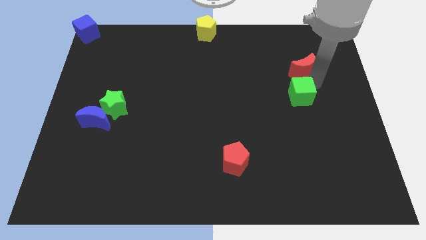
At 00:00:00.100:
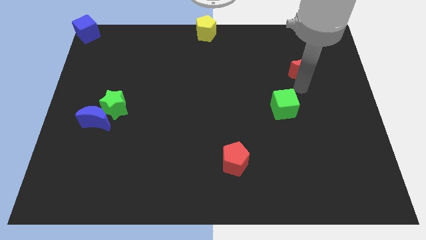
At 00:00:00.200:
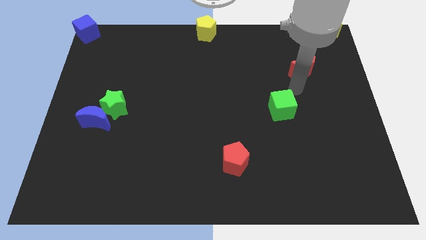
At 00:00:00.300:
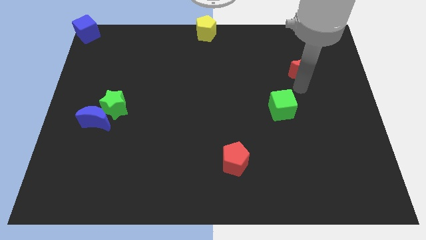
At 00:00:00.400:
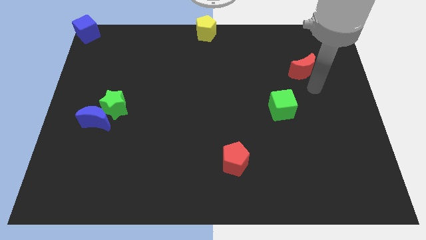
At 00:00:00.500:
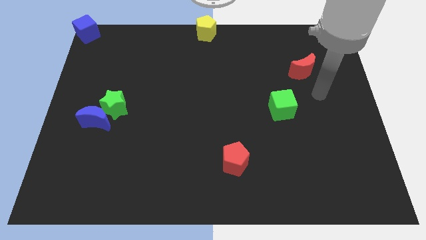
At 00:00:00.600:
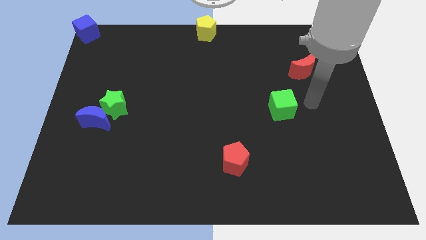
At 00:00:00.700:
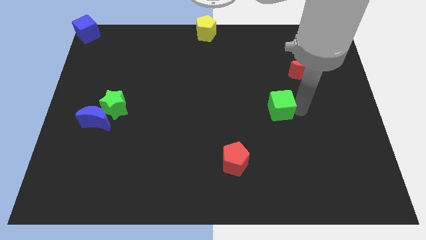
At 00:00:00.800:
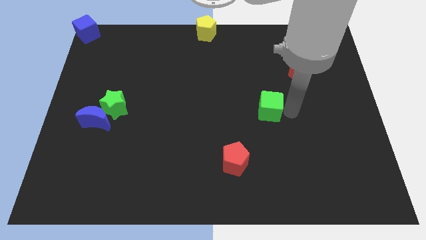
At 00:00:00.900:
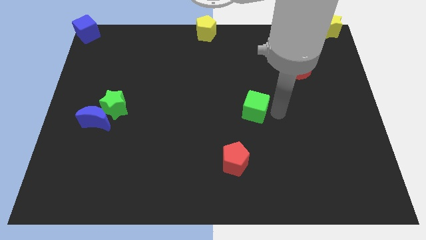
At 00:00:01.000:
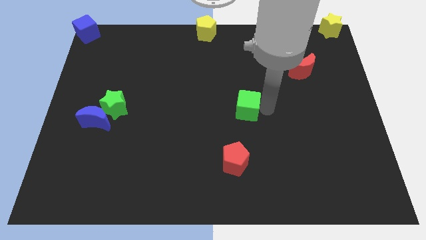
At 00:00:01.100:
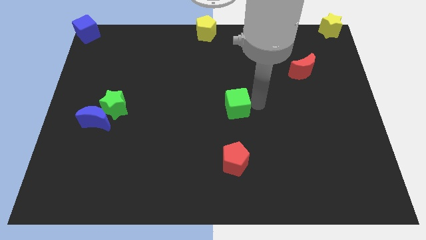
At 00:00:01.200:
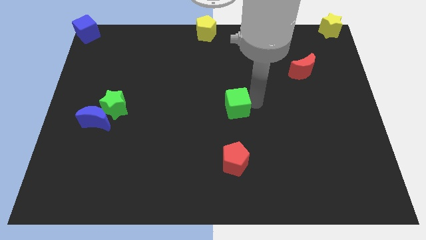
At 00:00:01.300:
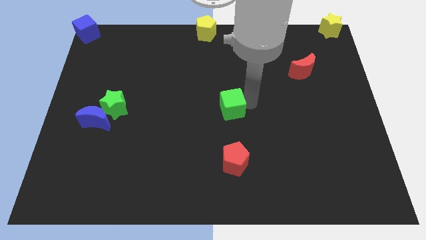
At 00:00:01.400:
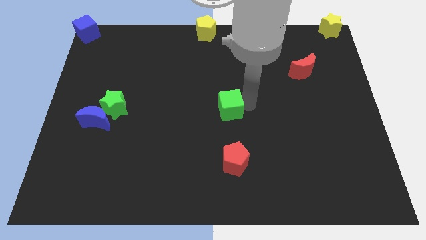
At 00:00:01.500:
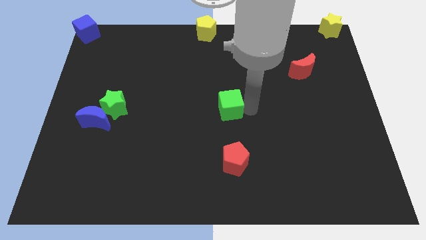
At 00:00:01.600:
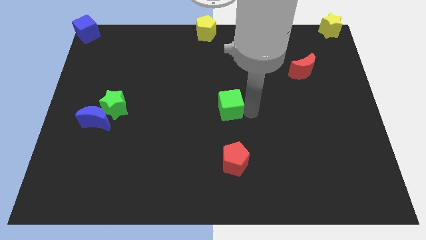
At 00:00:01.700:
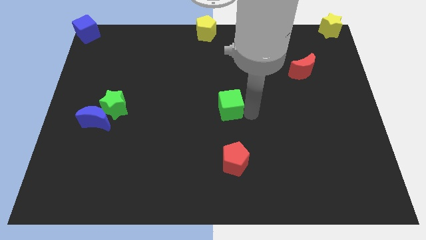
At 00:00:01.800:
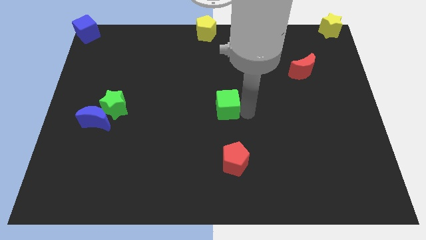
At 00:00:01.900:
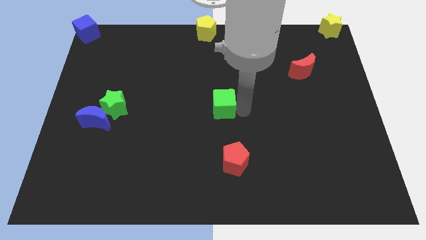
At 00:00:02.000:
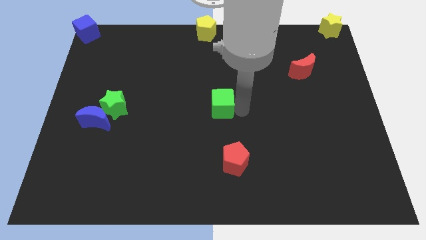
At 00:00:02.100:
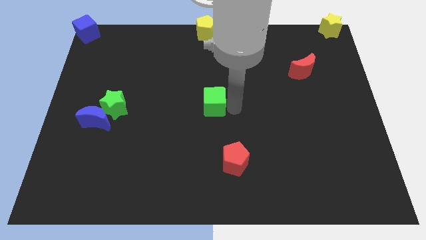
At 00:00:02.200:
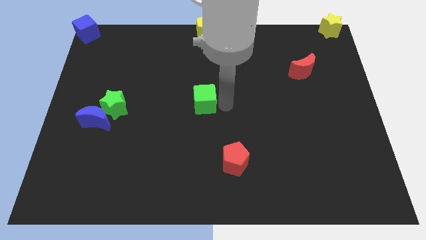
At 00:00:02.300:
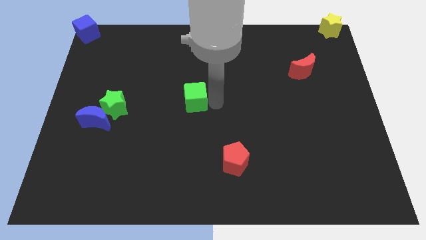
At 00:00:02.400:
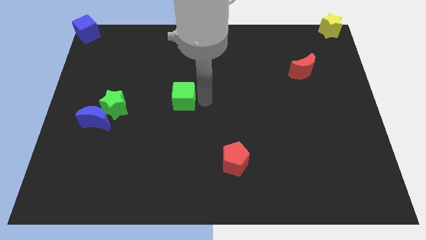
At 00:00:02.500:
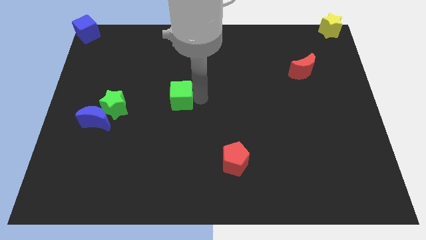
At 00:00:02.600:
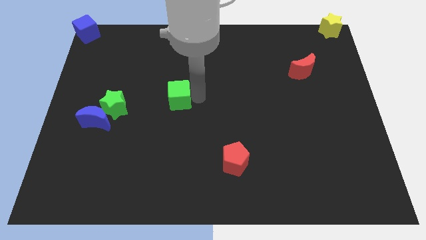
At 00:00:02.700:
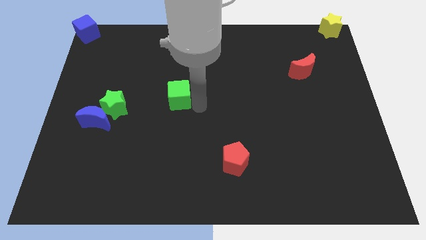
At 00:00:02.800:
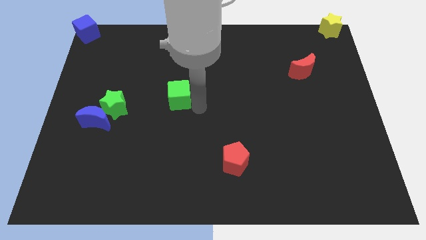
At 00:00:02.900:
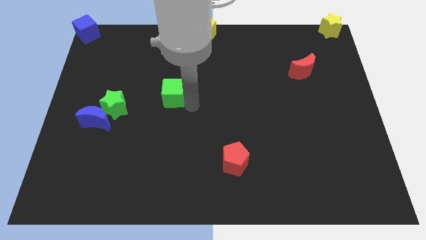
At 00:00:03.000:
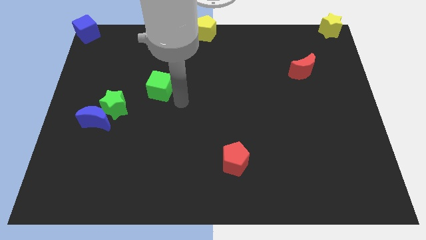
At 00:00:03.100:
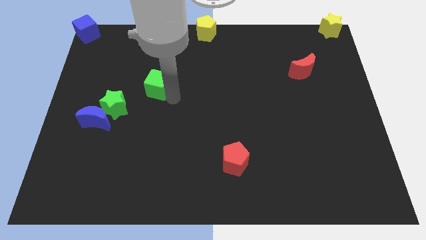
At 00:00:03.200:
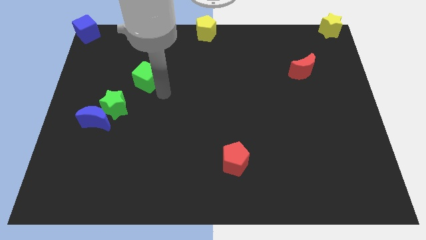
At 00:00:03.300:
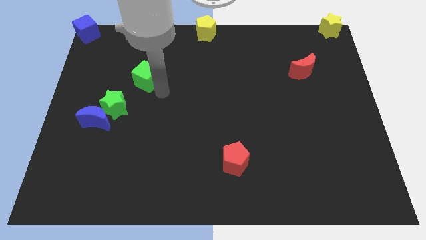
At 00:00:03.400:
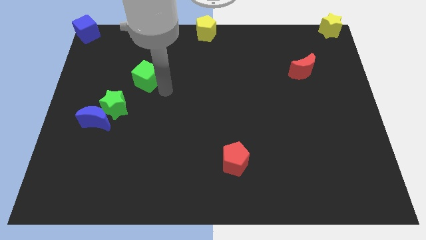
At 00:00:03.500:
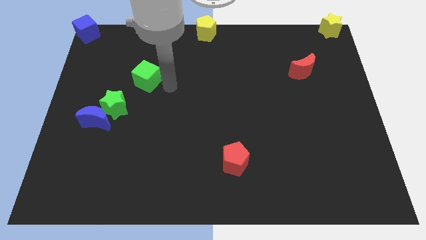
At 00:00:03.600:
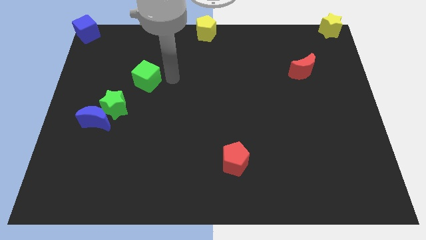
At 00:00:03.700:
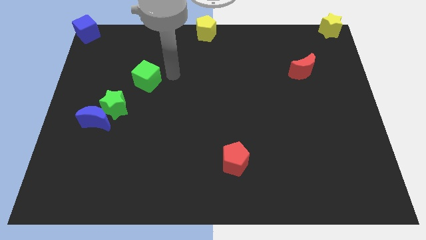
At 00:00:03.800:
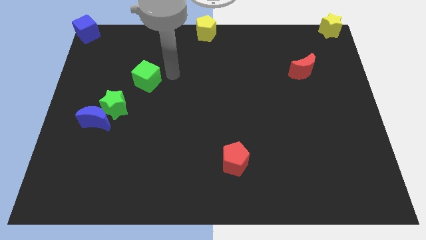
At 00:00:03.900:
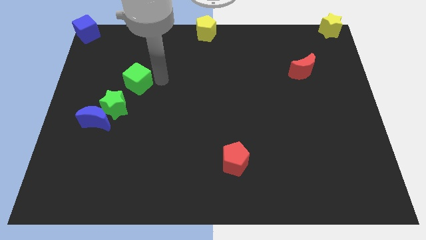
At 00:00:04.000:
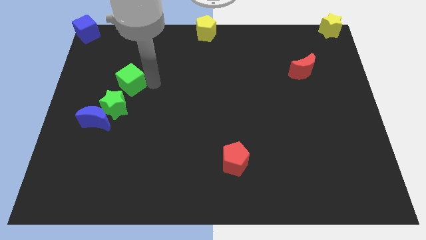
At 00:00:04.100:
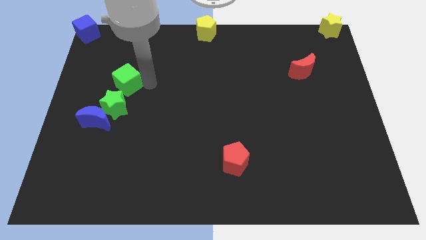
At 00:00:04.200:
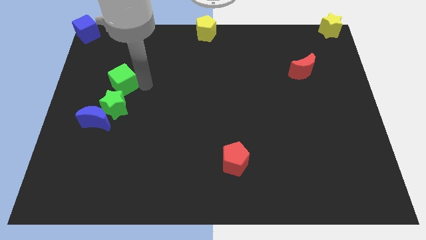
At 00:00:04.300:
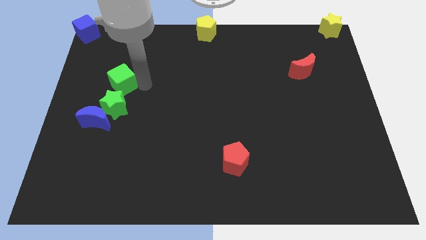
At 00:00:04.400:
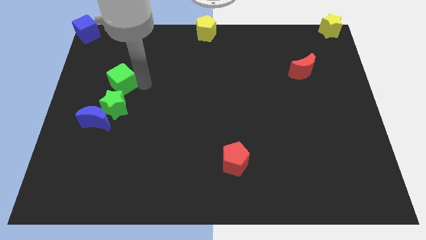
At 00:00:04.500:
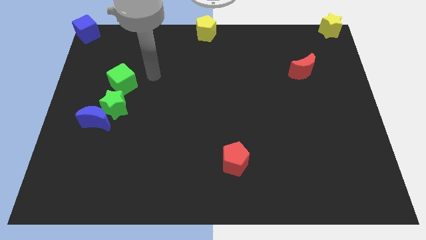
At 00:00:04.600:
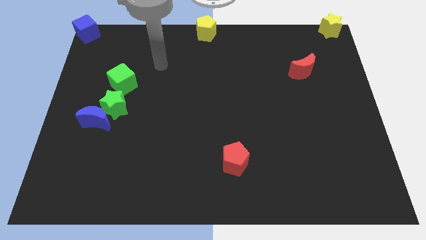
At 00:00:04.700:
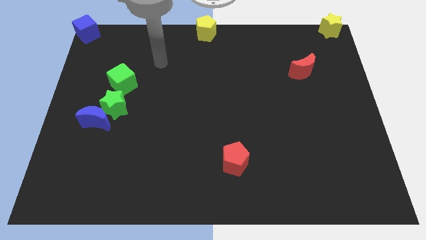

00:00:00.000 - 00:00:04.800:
place the green cube above green star

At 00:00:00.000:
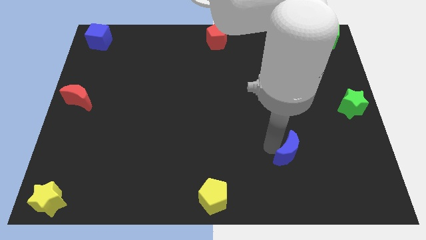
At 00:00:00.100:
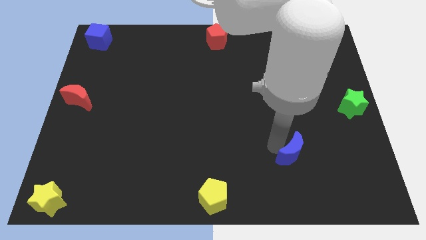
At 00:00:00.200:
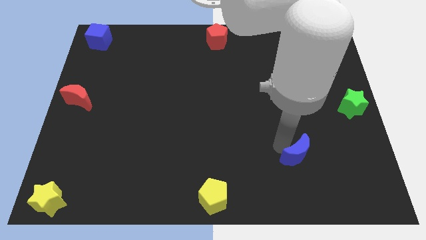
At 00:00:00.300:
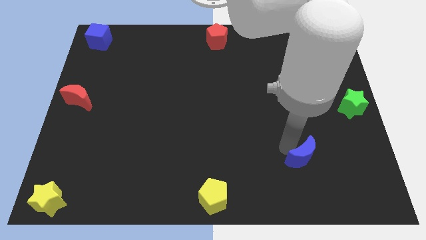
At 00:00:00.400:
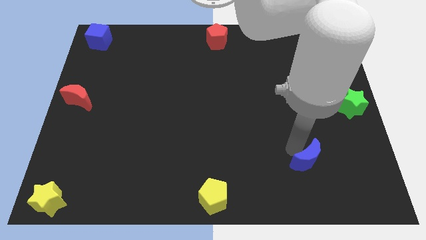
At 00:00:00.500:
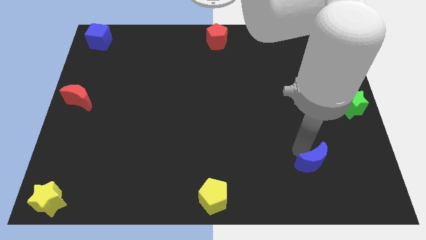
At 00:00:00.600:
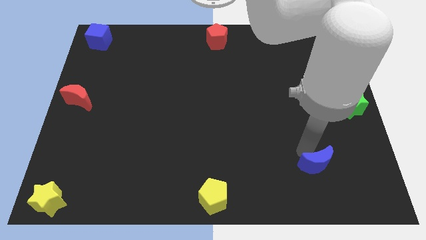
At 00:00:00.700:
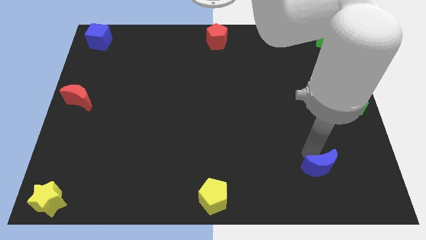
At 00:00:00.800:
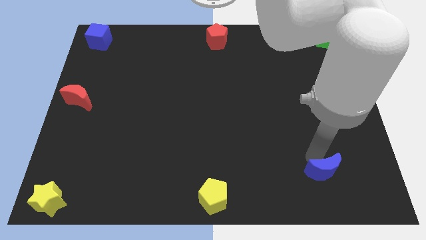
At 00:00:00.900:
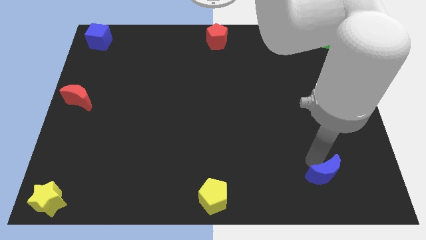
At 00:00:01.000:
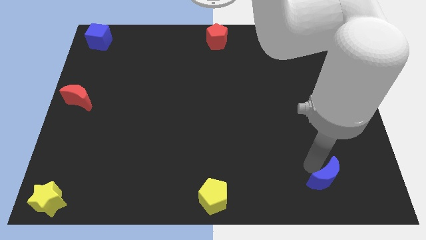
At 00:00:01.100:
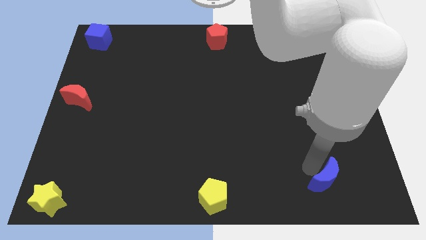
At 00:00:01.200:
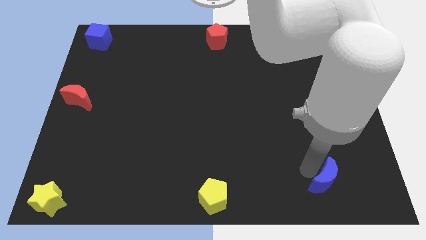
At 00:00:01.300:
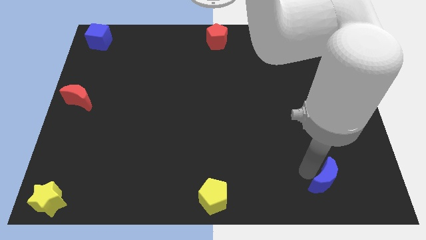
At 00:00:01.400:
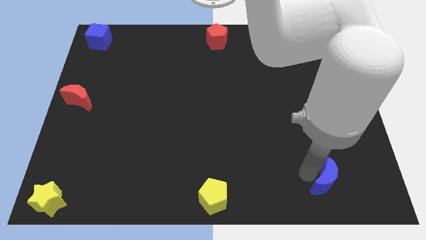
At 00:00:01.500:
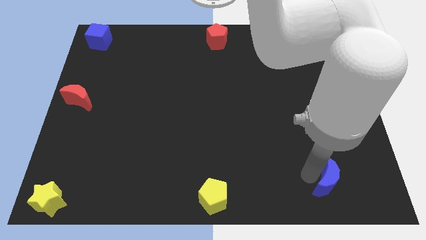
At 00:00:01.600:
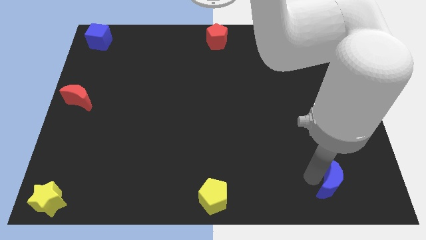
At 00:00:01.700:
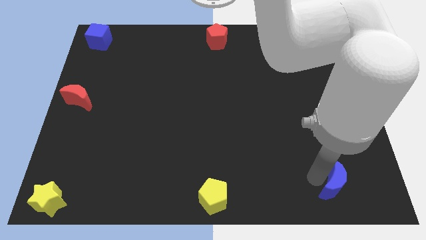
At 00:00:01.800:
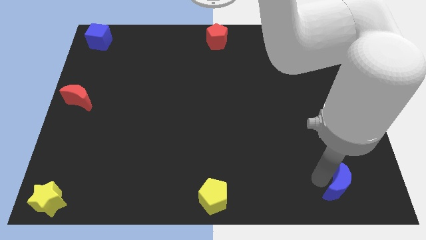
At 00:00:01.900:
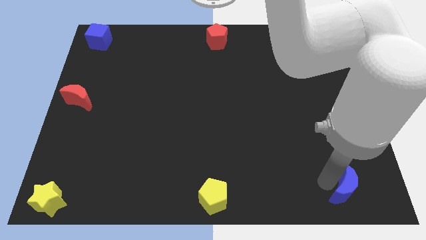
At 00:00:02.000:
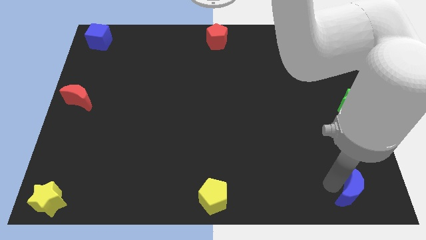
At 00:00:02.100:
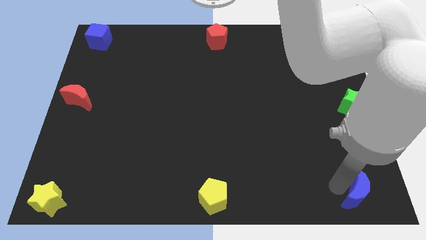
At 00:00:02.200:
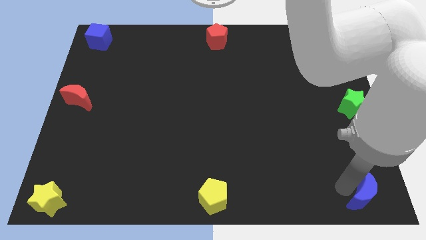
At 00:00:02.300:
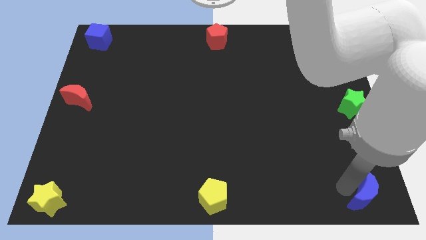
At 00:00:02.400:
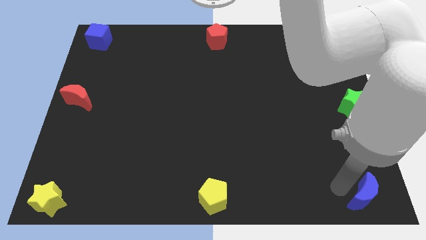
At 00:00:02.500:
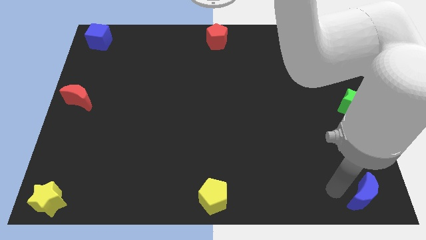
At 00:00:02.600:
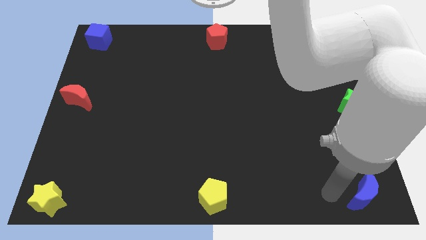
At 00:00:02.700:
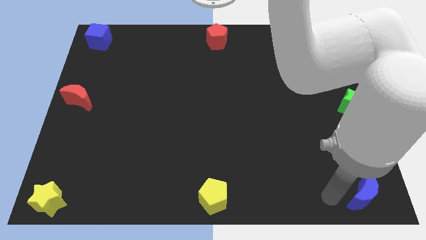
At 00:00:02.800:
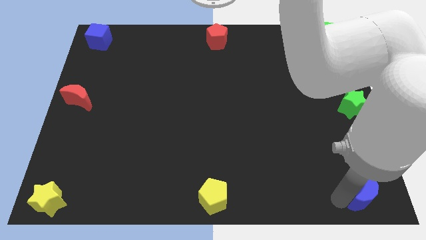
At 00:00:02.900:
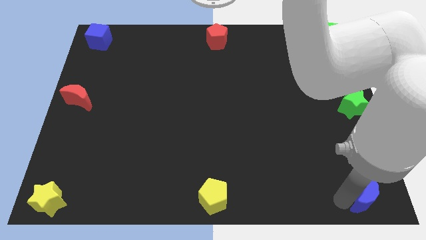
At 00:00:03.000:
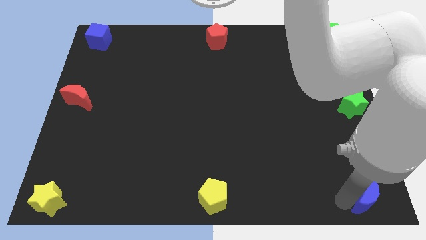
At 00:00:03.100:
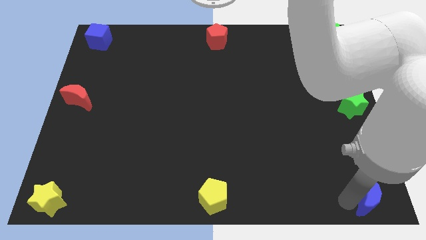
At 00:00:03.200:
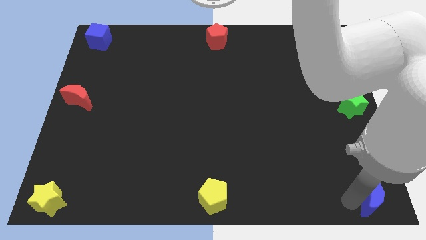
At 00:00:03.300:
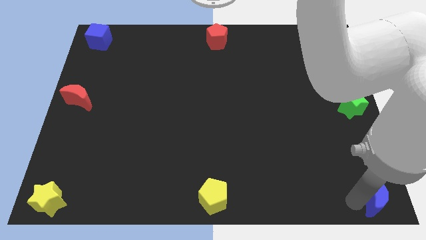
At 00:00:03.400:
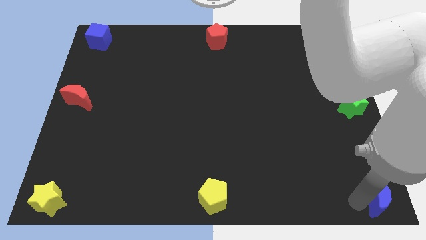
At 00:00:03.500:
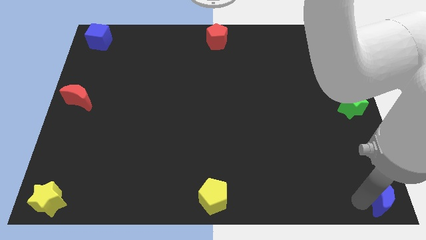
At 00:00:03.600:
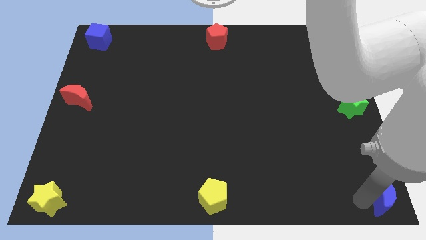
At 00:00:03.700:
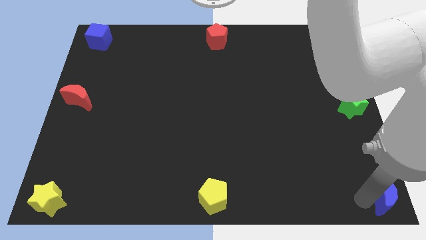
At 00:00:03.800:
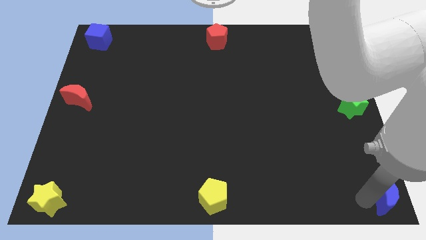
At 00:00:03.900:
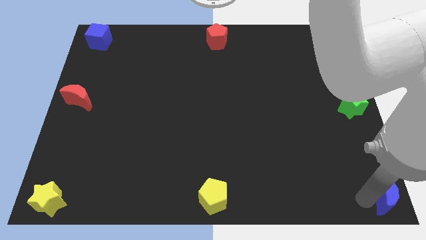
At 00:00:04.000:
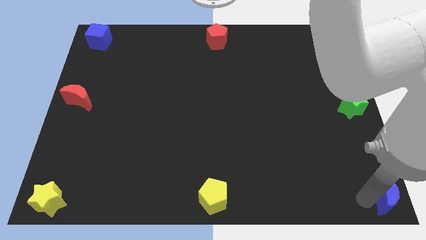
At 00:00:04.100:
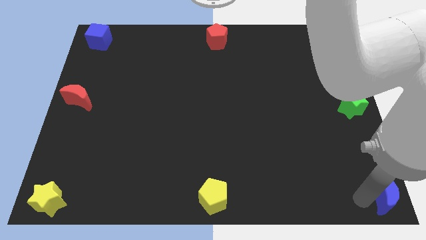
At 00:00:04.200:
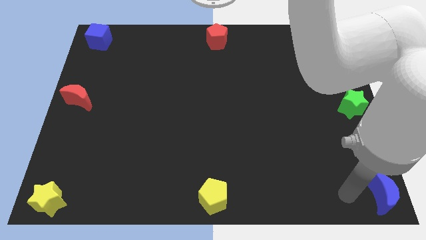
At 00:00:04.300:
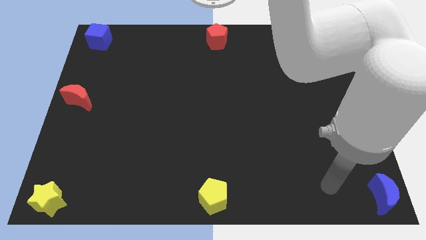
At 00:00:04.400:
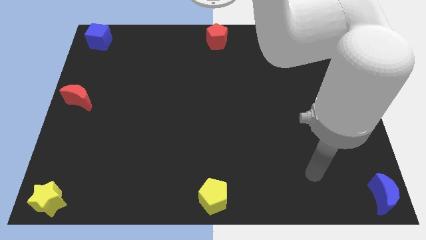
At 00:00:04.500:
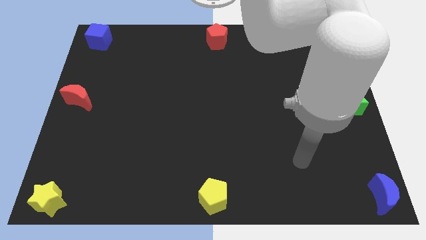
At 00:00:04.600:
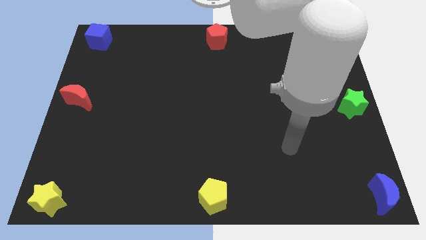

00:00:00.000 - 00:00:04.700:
put the blue moon at the bottom right corner of the board
